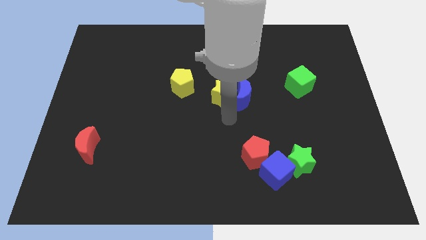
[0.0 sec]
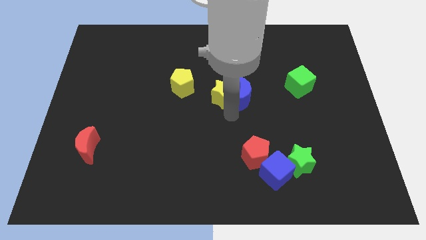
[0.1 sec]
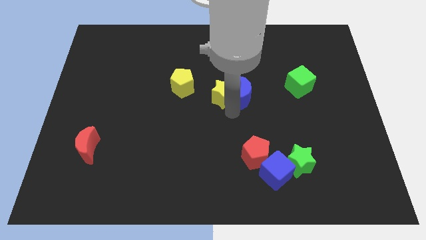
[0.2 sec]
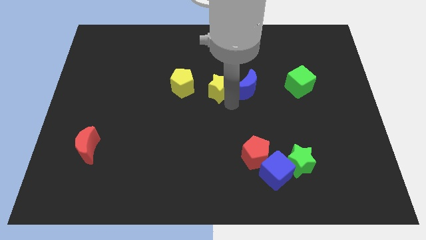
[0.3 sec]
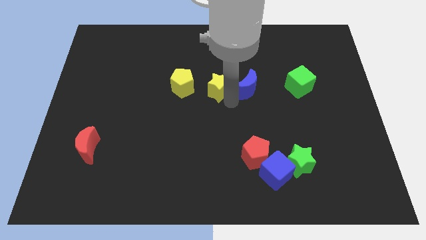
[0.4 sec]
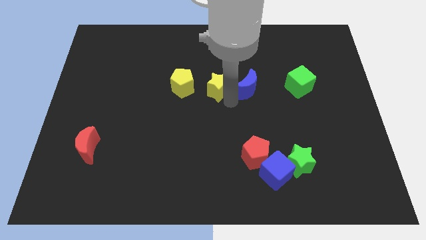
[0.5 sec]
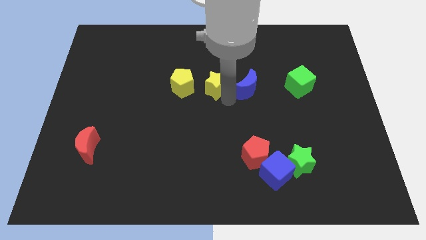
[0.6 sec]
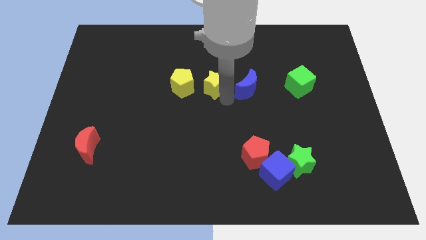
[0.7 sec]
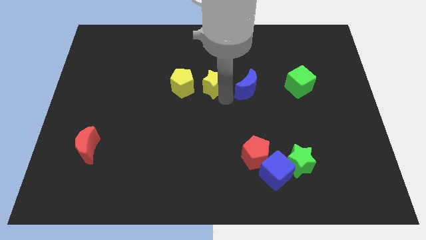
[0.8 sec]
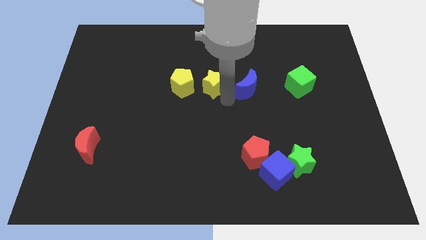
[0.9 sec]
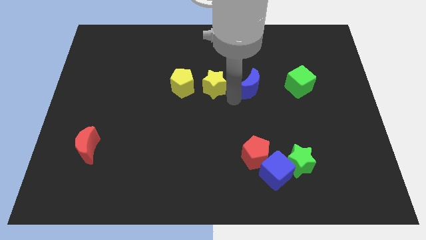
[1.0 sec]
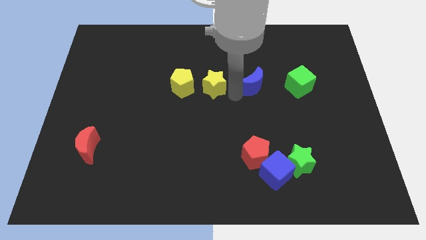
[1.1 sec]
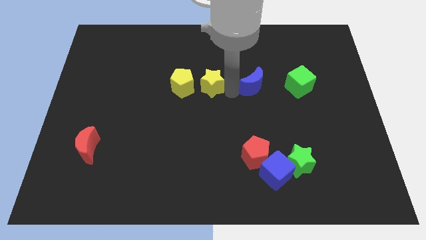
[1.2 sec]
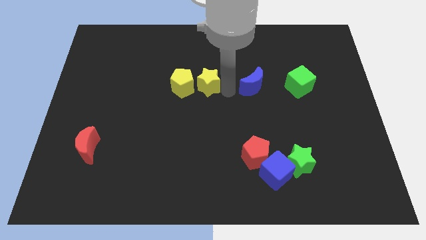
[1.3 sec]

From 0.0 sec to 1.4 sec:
move yellow star into yellow pentagon

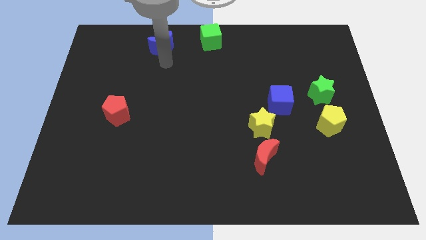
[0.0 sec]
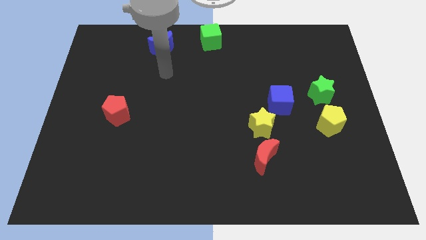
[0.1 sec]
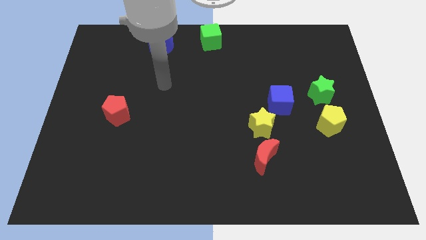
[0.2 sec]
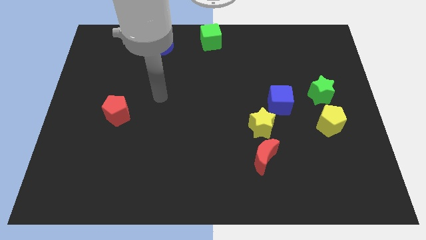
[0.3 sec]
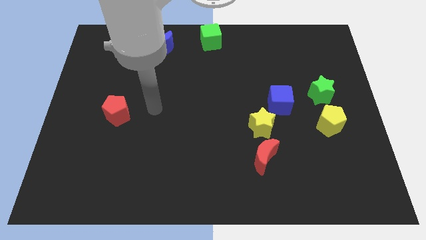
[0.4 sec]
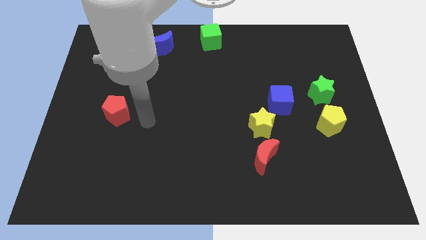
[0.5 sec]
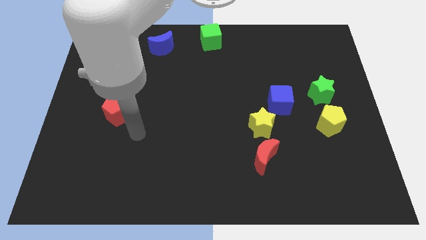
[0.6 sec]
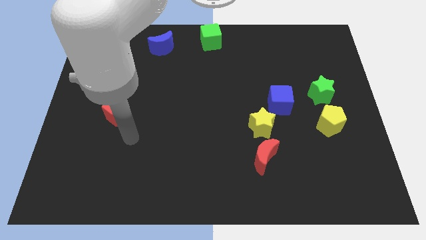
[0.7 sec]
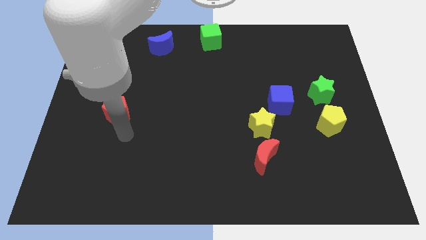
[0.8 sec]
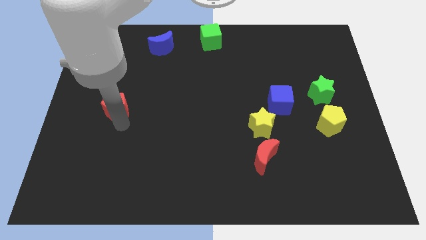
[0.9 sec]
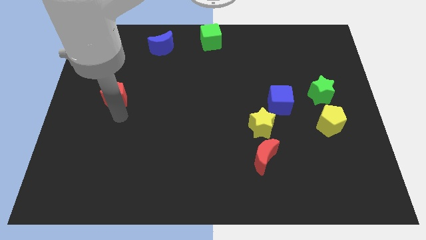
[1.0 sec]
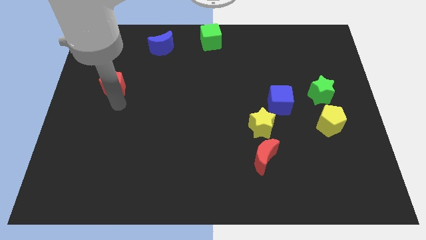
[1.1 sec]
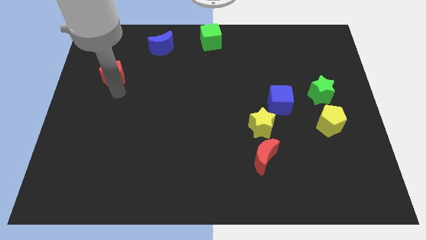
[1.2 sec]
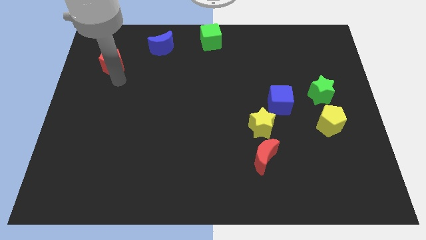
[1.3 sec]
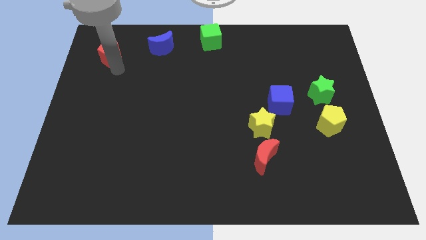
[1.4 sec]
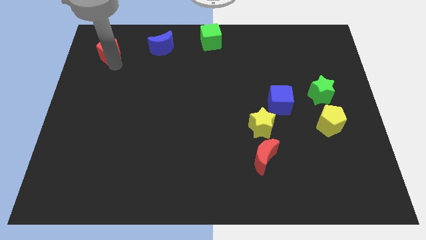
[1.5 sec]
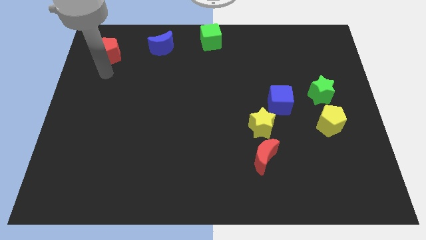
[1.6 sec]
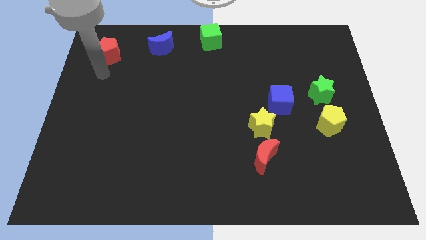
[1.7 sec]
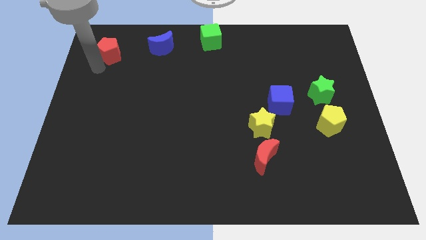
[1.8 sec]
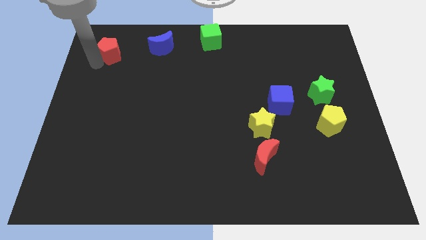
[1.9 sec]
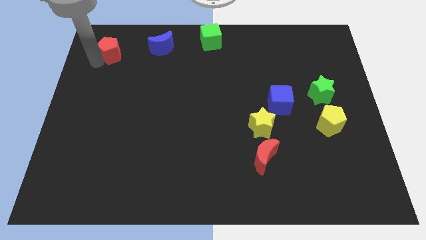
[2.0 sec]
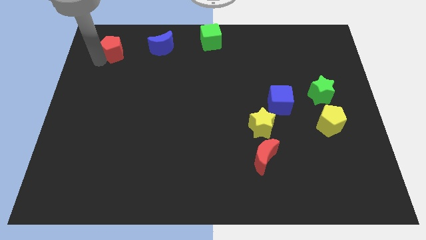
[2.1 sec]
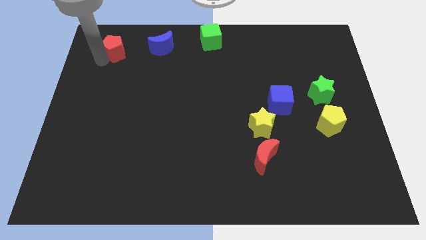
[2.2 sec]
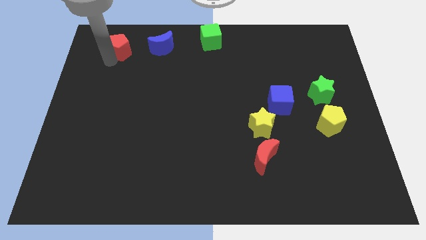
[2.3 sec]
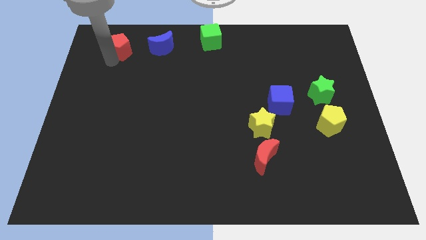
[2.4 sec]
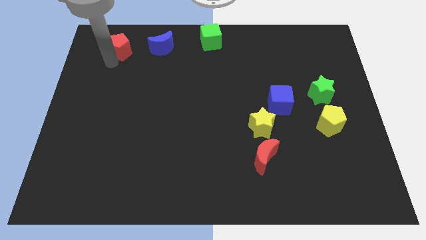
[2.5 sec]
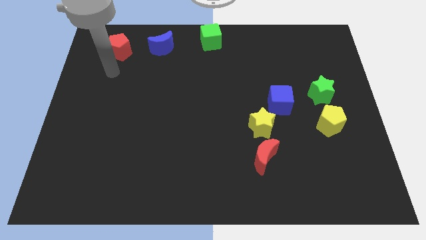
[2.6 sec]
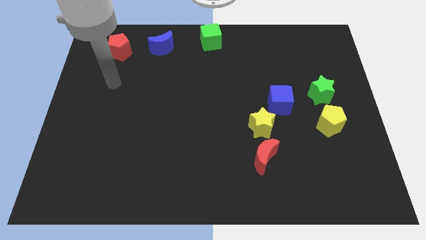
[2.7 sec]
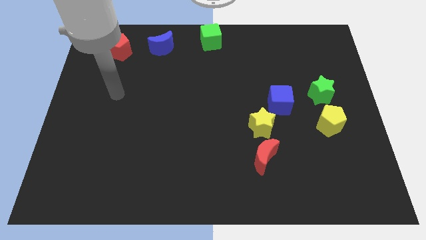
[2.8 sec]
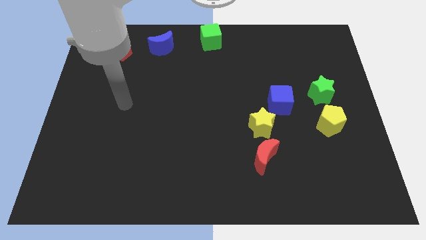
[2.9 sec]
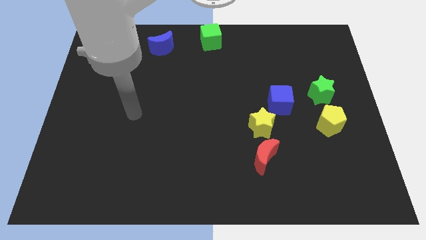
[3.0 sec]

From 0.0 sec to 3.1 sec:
go and push the red pentagon to the left of the blue crescent

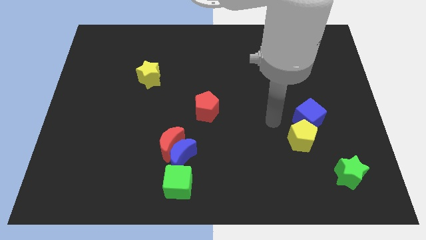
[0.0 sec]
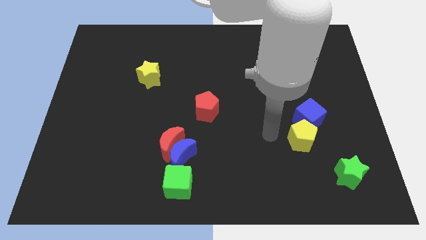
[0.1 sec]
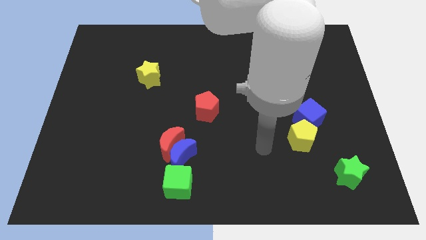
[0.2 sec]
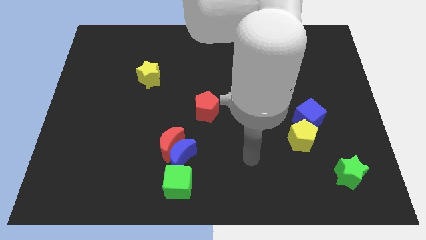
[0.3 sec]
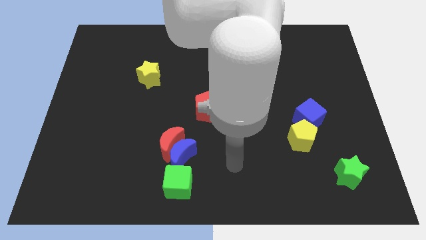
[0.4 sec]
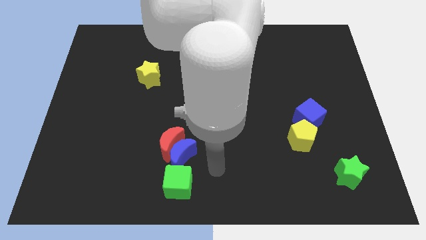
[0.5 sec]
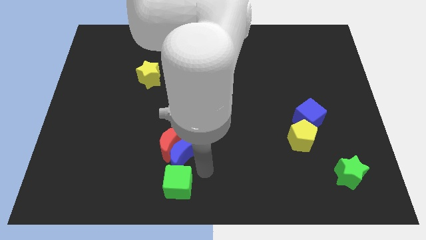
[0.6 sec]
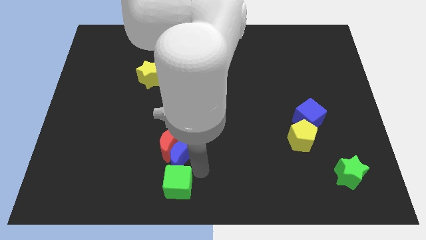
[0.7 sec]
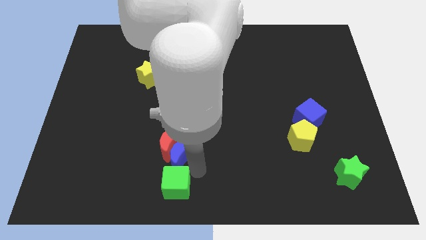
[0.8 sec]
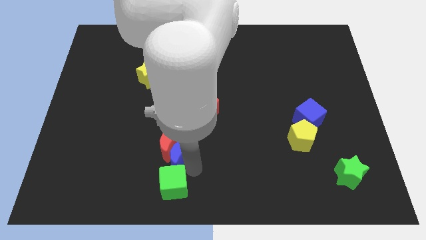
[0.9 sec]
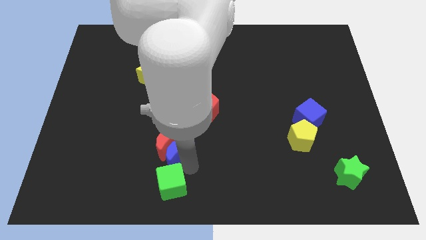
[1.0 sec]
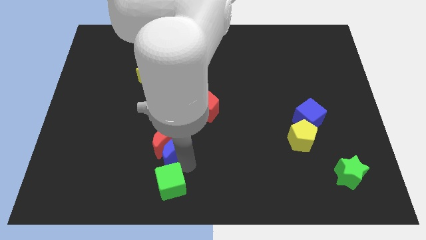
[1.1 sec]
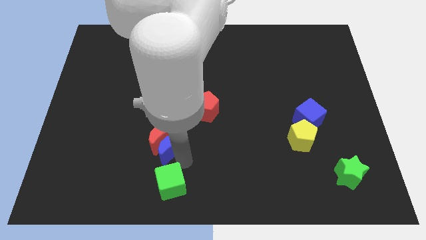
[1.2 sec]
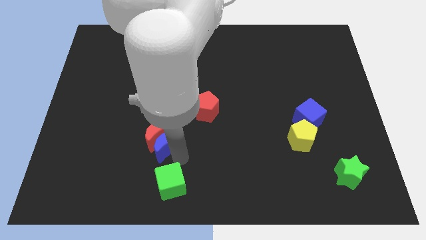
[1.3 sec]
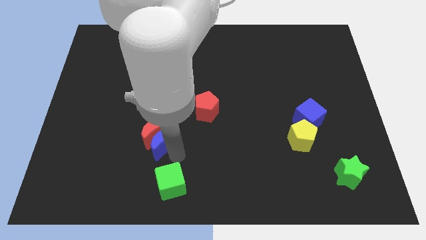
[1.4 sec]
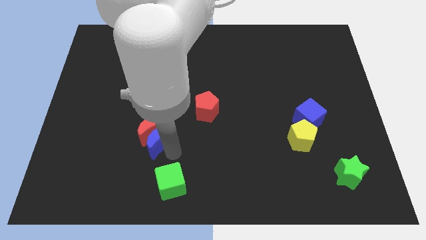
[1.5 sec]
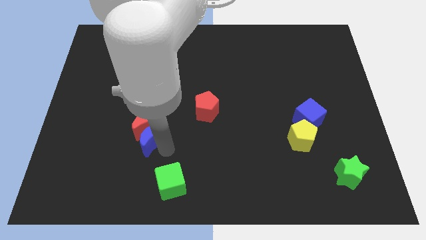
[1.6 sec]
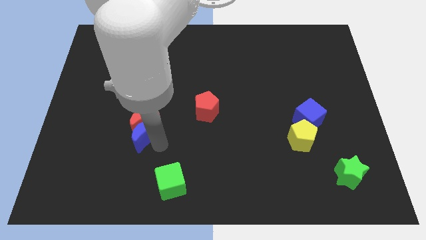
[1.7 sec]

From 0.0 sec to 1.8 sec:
push the blue crescent along with the red crescent slightly to the top

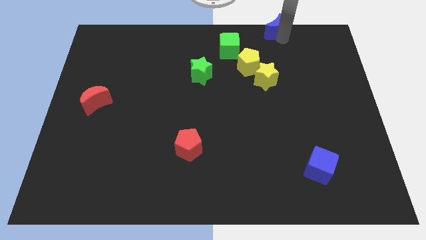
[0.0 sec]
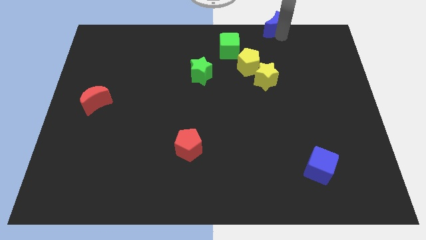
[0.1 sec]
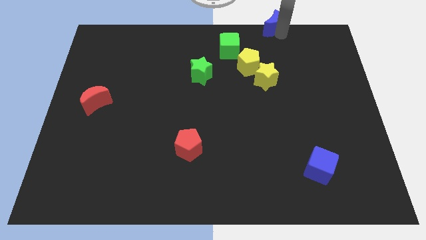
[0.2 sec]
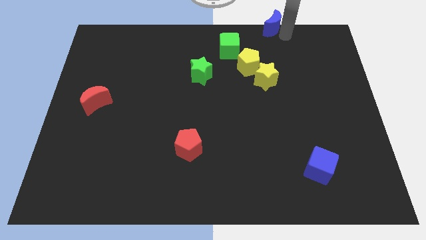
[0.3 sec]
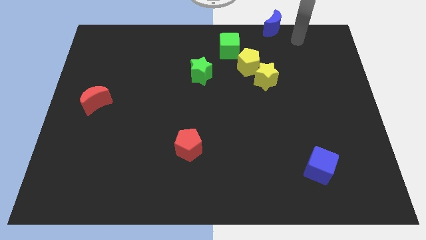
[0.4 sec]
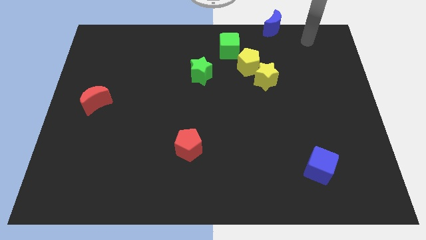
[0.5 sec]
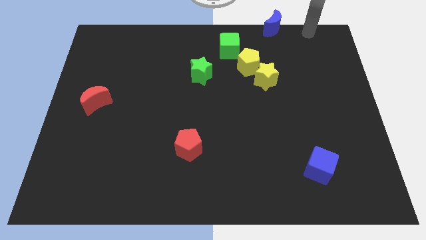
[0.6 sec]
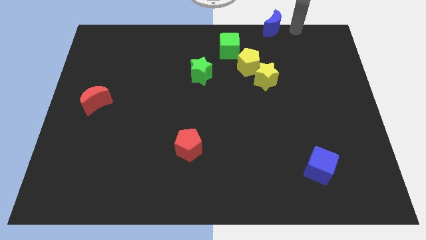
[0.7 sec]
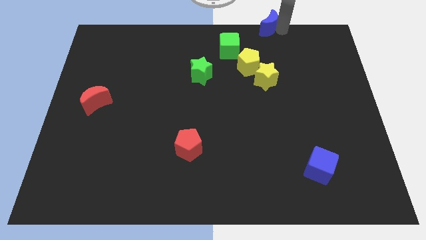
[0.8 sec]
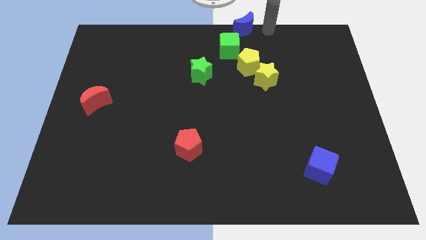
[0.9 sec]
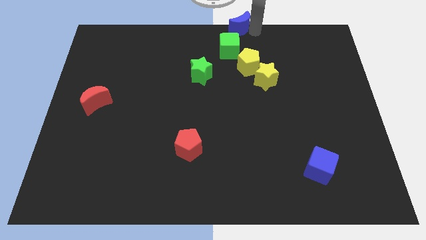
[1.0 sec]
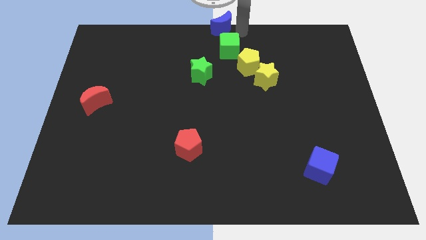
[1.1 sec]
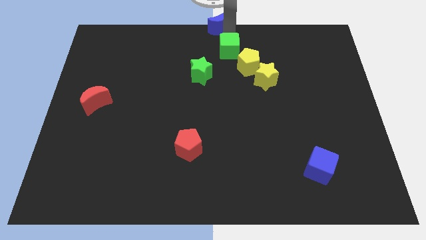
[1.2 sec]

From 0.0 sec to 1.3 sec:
move blue crescent at the center top

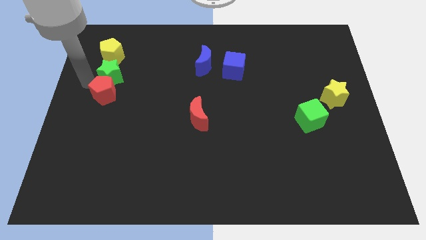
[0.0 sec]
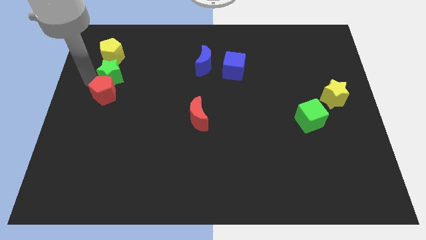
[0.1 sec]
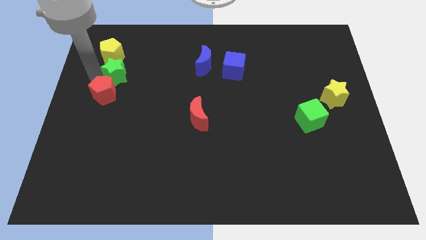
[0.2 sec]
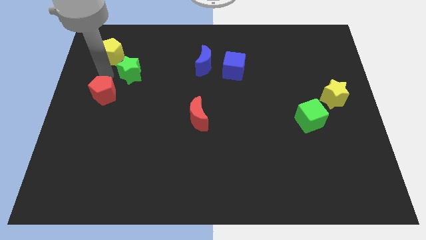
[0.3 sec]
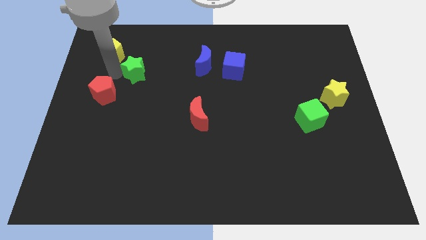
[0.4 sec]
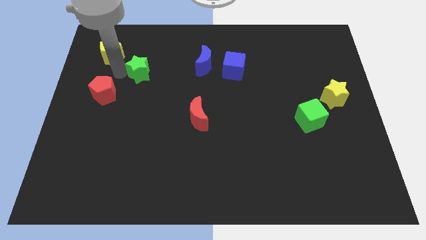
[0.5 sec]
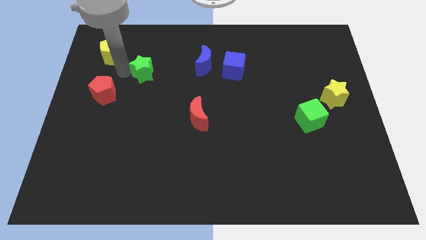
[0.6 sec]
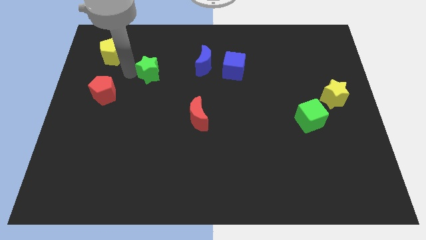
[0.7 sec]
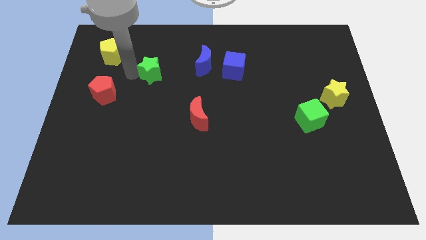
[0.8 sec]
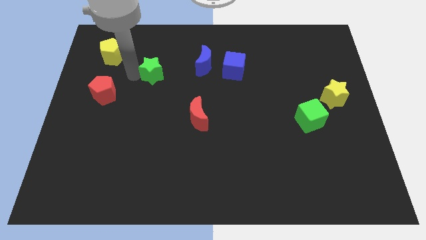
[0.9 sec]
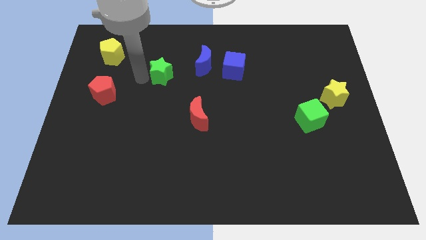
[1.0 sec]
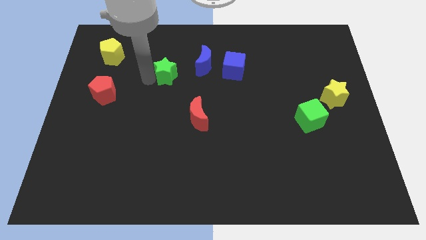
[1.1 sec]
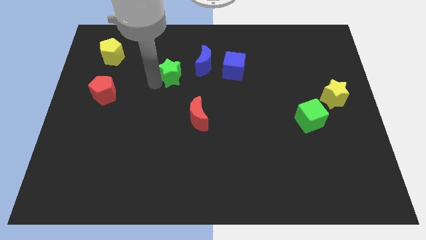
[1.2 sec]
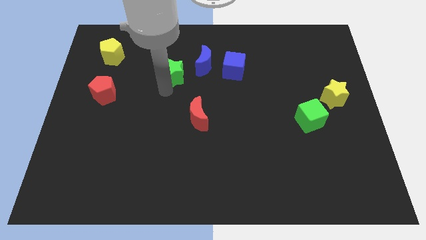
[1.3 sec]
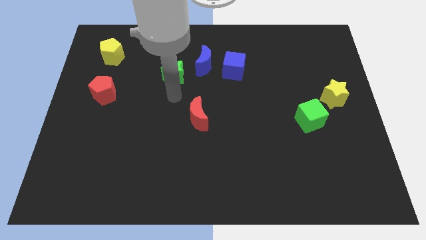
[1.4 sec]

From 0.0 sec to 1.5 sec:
push the green star towards the right side of the board
